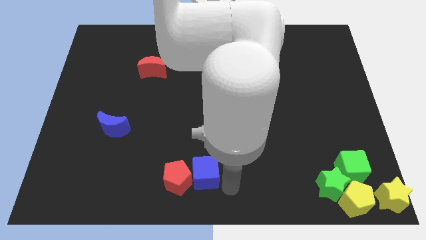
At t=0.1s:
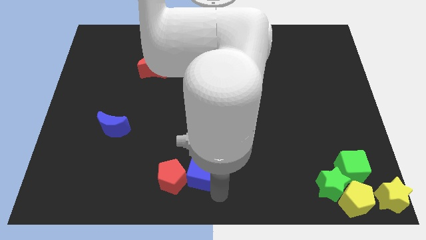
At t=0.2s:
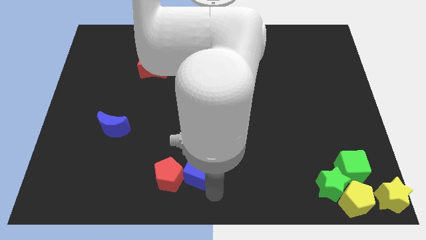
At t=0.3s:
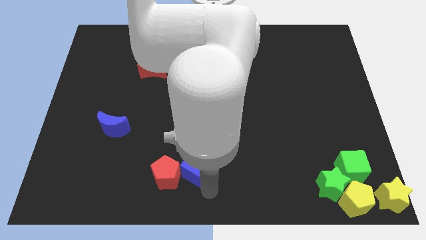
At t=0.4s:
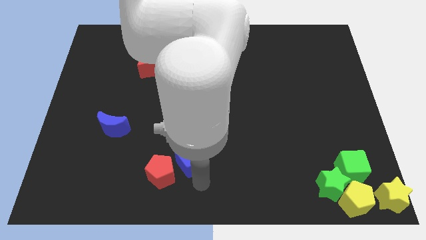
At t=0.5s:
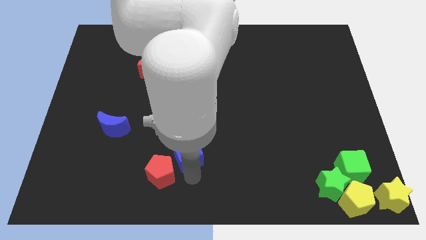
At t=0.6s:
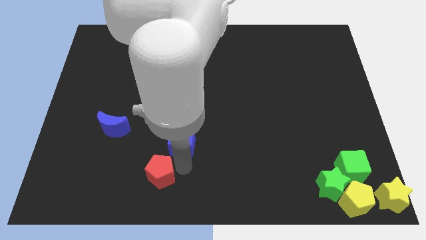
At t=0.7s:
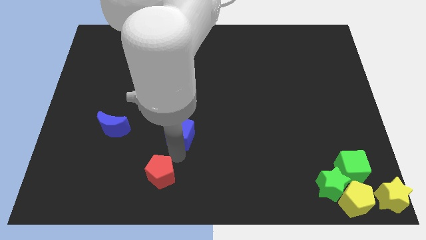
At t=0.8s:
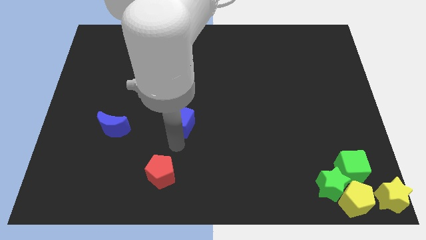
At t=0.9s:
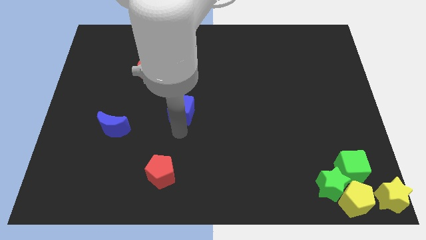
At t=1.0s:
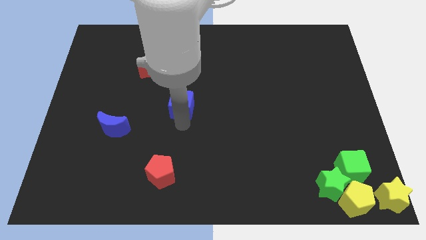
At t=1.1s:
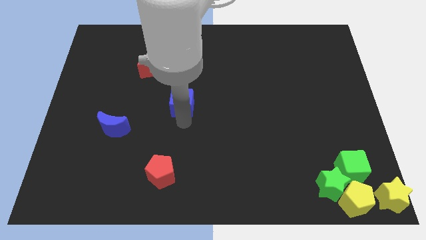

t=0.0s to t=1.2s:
separate the blue cube from the red pentagon

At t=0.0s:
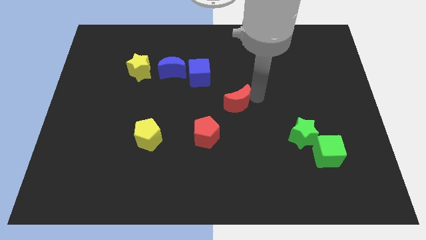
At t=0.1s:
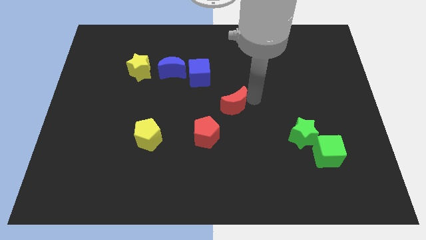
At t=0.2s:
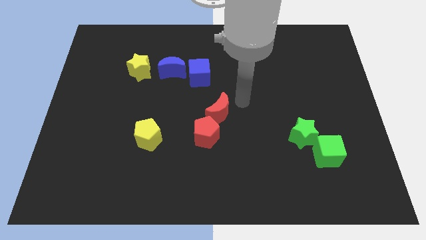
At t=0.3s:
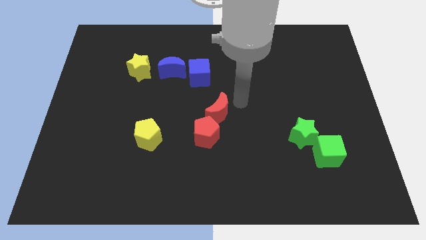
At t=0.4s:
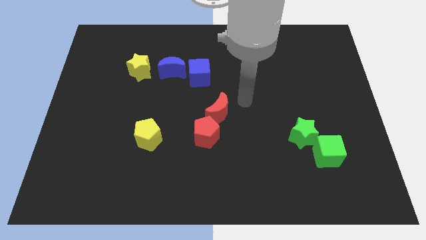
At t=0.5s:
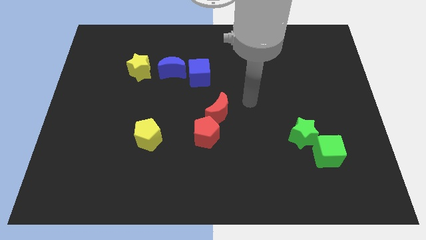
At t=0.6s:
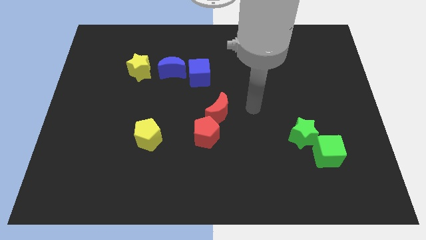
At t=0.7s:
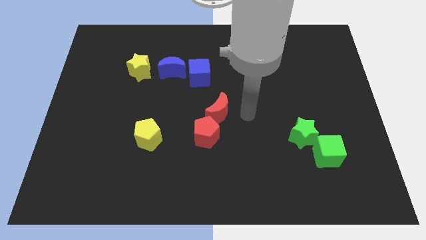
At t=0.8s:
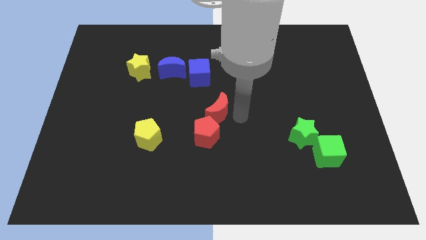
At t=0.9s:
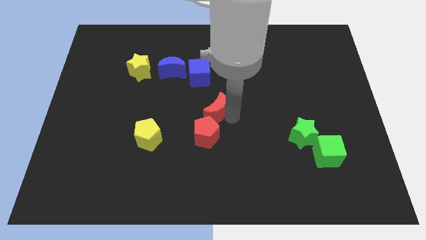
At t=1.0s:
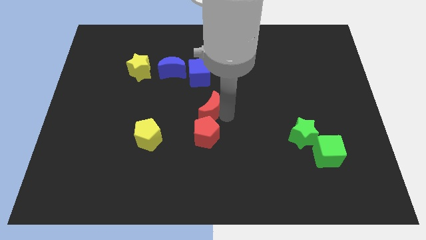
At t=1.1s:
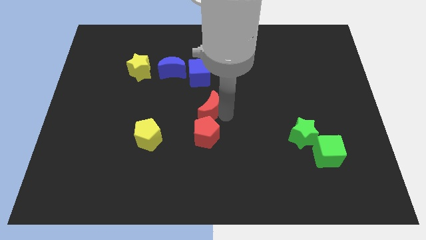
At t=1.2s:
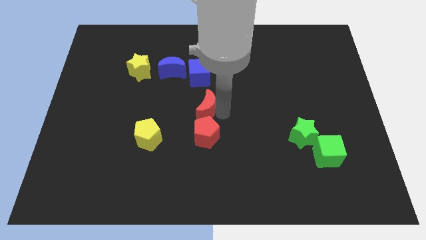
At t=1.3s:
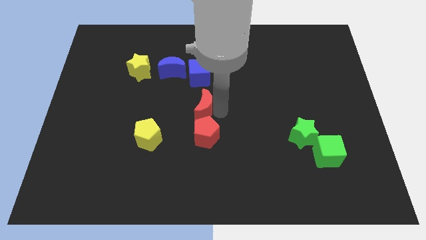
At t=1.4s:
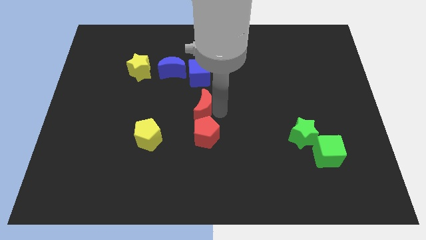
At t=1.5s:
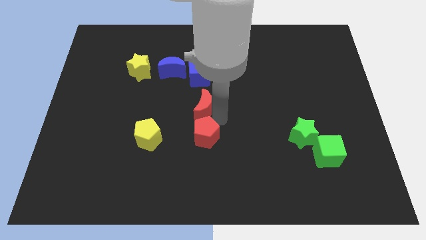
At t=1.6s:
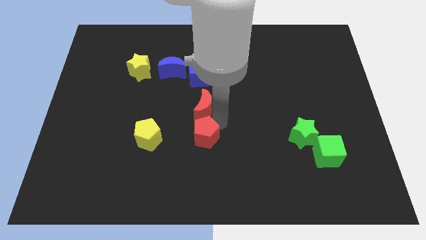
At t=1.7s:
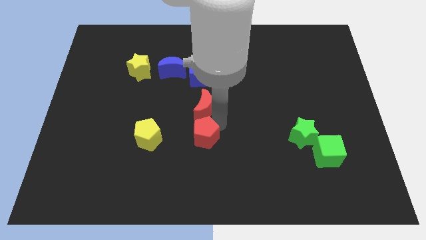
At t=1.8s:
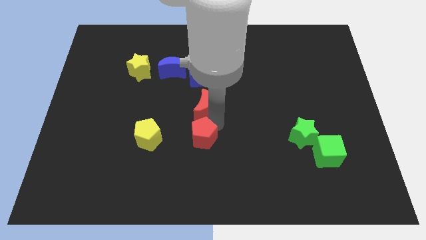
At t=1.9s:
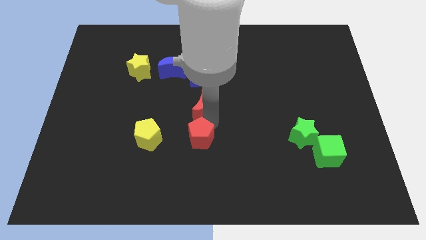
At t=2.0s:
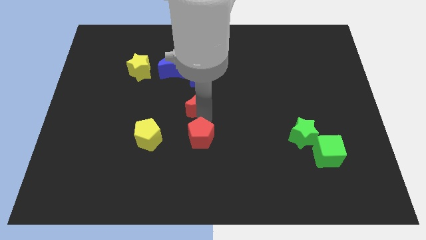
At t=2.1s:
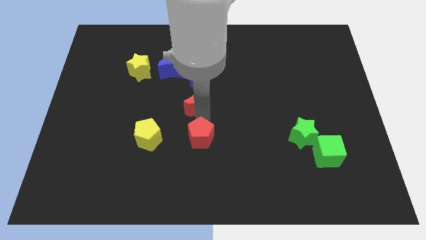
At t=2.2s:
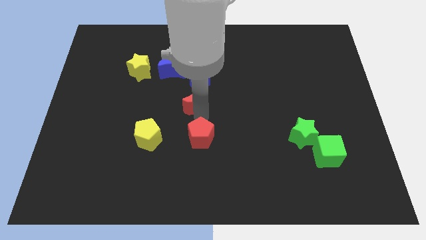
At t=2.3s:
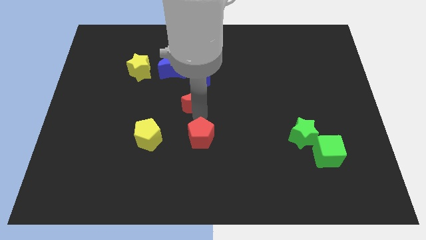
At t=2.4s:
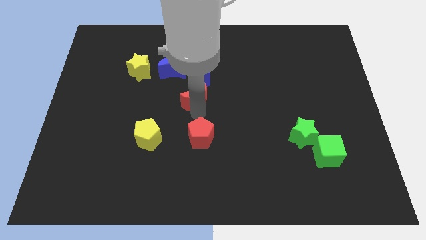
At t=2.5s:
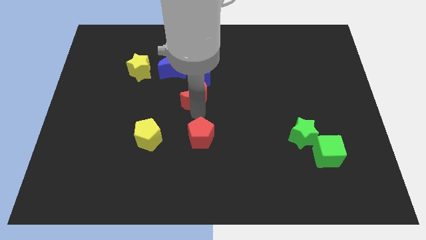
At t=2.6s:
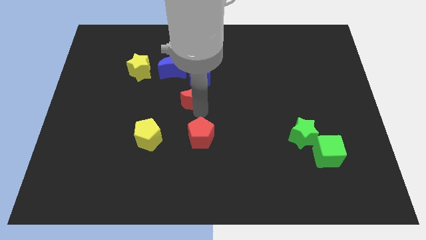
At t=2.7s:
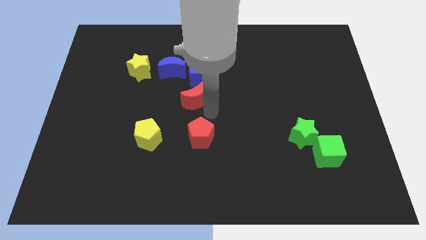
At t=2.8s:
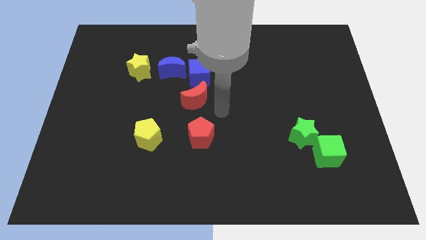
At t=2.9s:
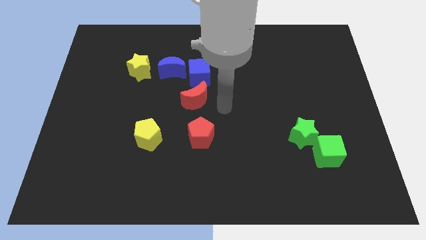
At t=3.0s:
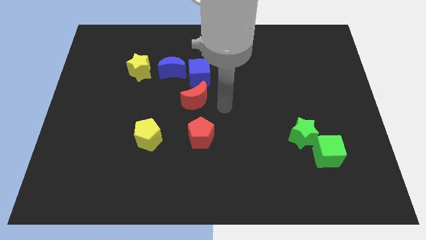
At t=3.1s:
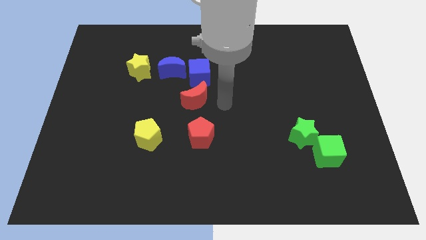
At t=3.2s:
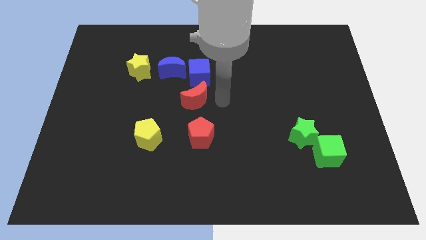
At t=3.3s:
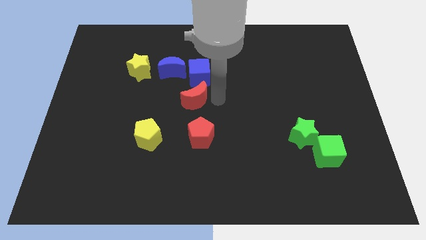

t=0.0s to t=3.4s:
place red moon below blue cube

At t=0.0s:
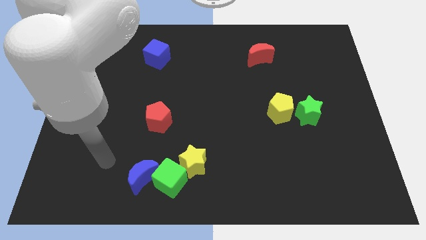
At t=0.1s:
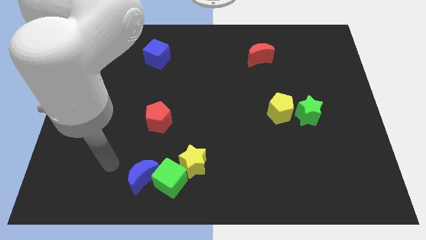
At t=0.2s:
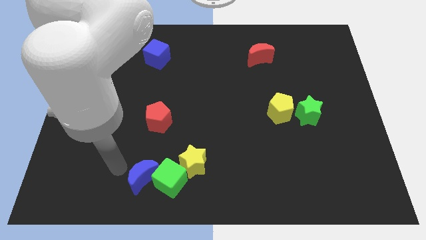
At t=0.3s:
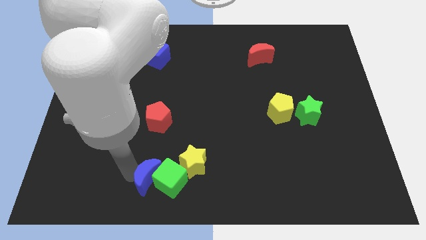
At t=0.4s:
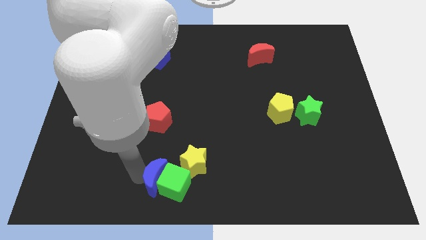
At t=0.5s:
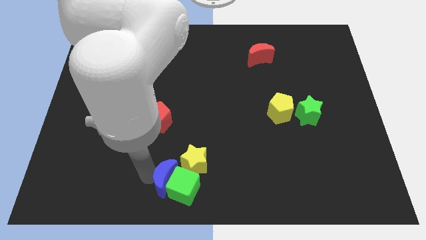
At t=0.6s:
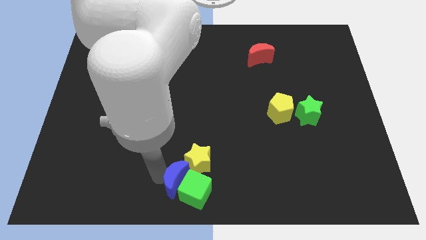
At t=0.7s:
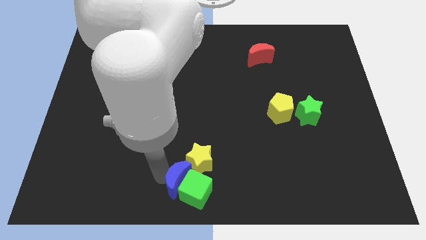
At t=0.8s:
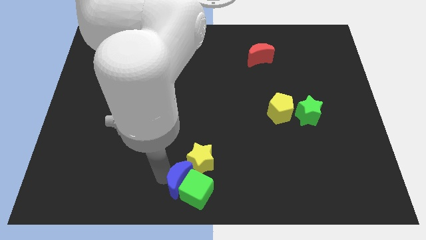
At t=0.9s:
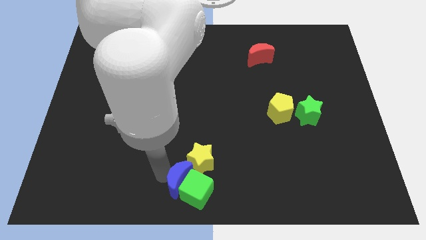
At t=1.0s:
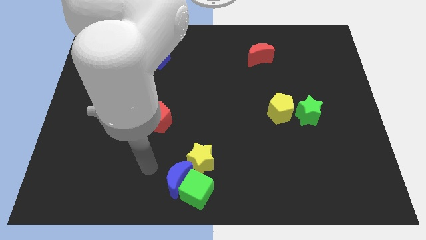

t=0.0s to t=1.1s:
place the blue crescent and green cube at the bottom of the yellow star

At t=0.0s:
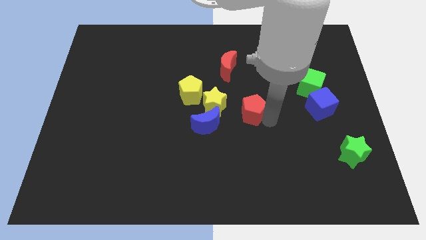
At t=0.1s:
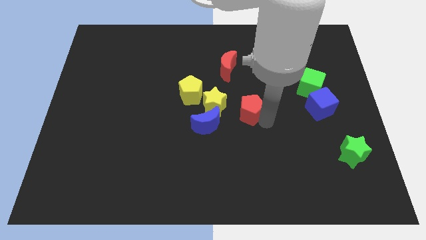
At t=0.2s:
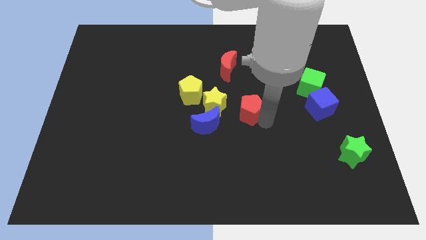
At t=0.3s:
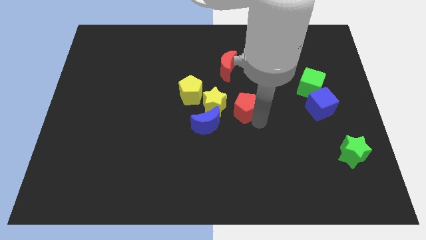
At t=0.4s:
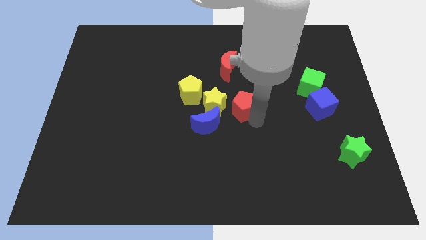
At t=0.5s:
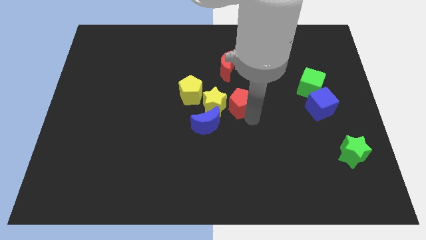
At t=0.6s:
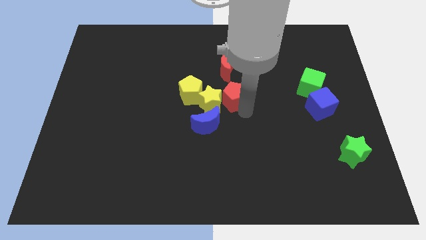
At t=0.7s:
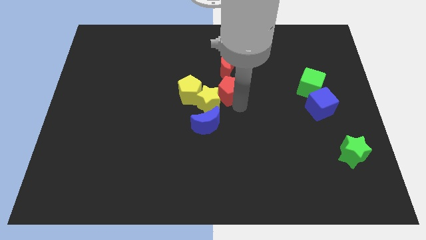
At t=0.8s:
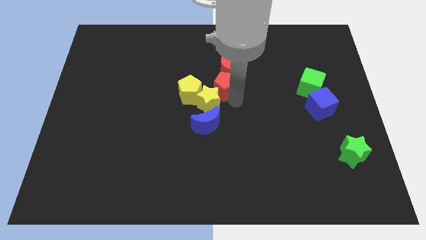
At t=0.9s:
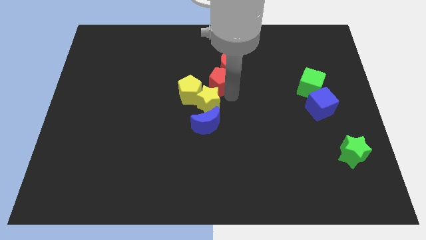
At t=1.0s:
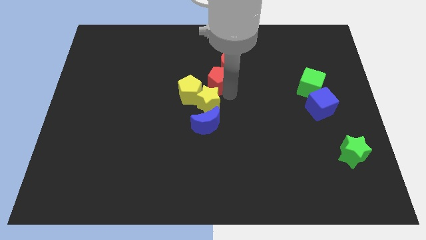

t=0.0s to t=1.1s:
place red pentagon in between yellow star and red moon

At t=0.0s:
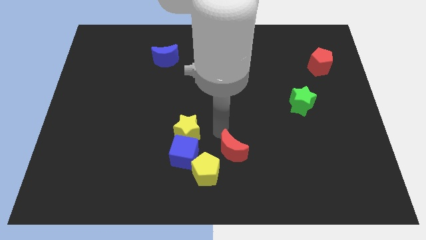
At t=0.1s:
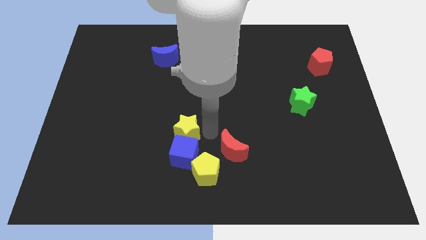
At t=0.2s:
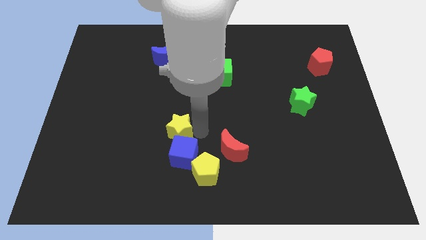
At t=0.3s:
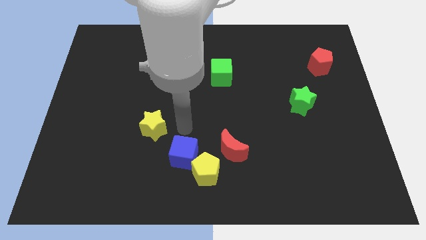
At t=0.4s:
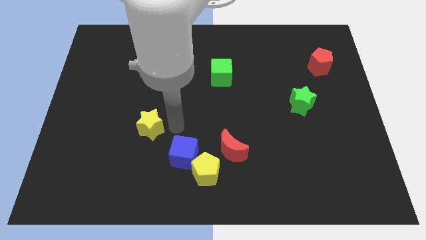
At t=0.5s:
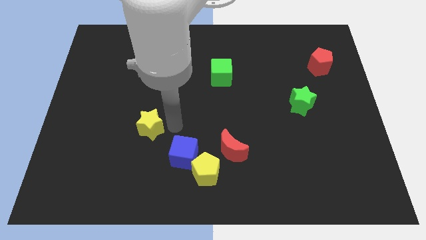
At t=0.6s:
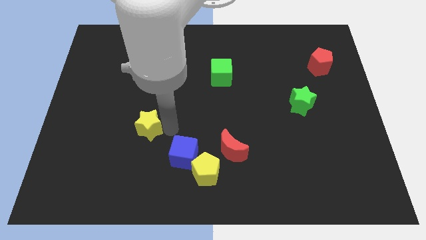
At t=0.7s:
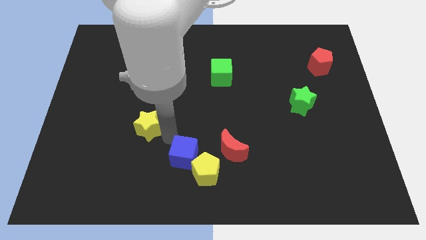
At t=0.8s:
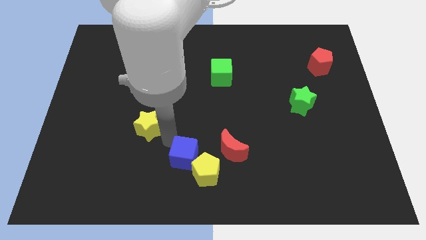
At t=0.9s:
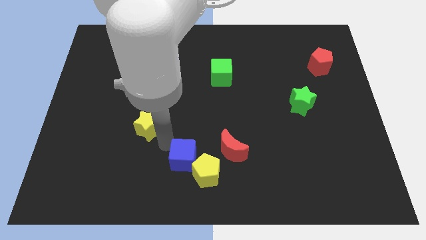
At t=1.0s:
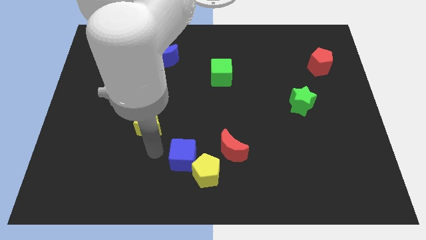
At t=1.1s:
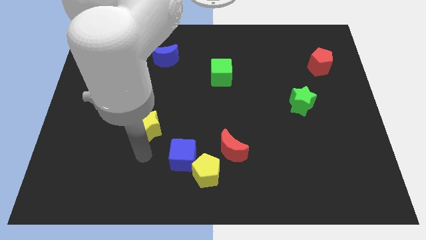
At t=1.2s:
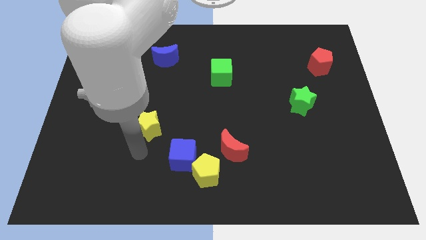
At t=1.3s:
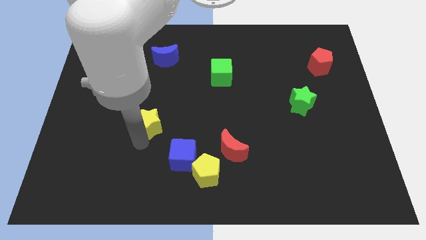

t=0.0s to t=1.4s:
slide the yellow star slightly to the left

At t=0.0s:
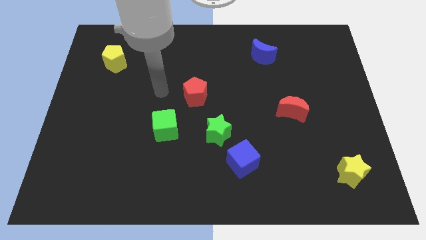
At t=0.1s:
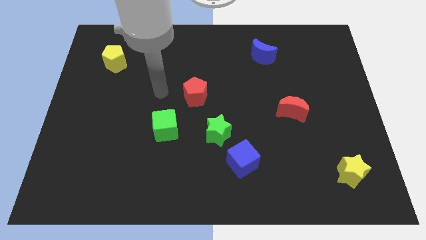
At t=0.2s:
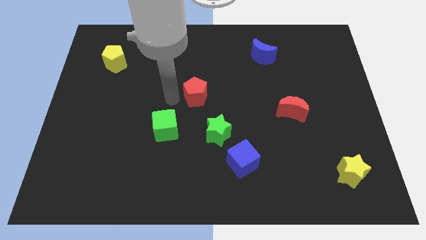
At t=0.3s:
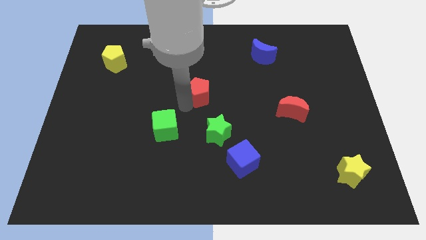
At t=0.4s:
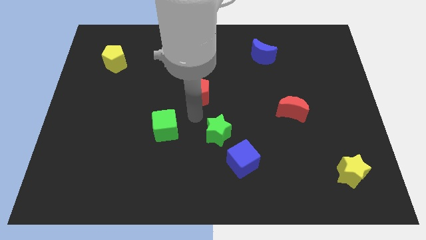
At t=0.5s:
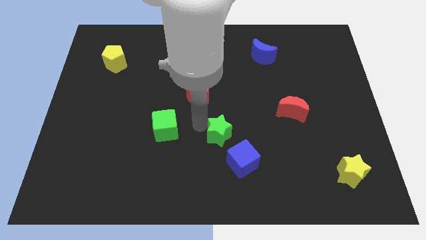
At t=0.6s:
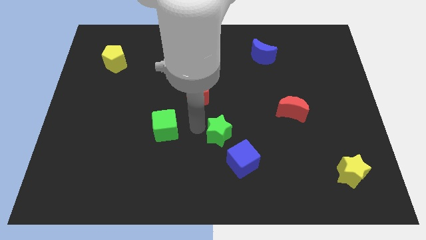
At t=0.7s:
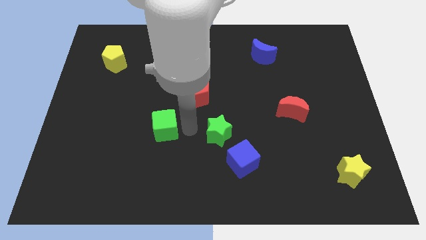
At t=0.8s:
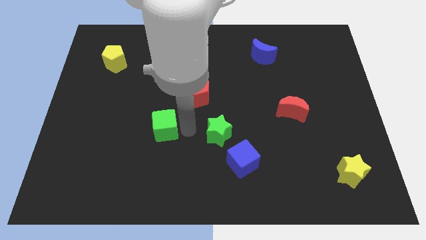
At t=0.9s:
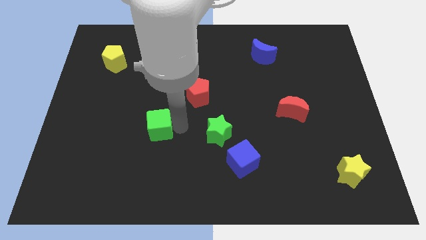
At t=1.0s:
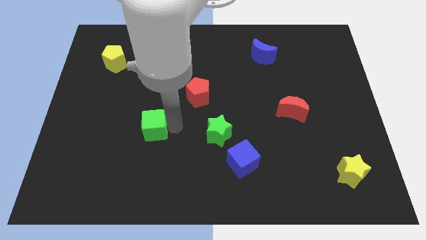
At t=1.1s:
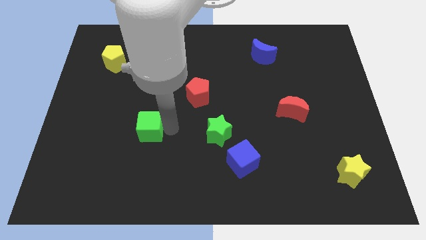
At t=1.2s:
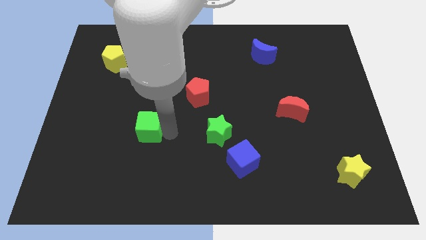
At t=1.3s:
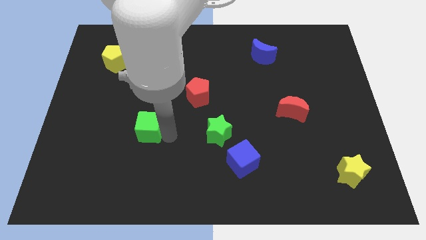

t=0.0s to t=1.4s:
push the green cube slightly to the left
